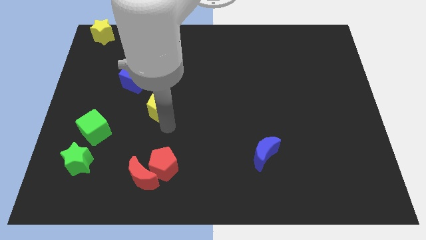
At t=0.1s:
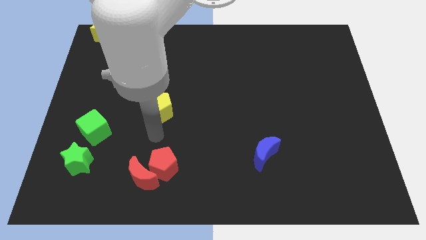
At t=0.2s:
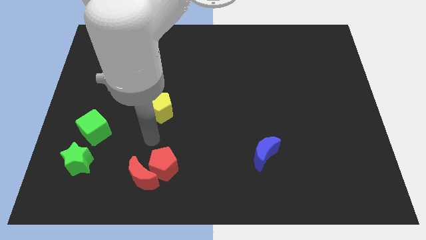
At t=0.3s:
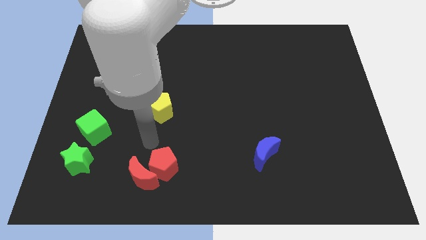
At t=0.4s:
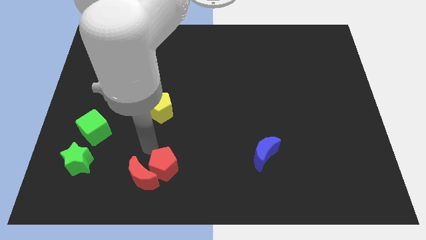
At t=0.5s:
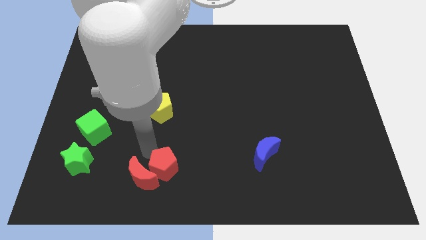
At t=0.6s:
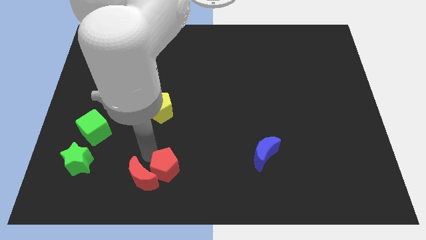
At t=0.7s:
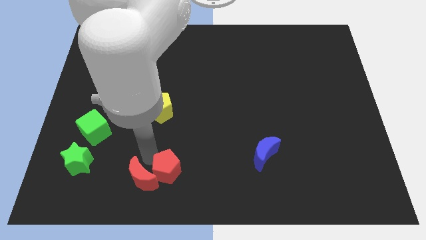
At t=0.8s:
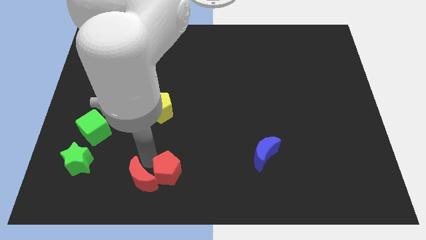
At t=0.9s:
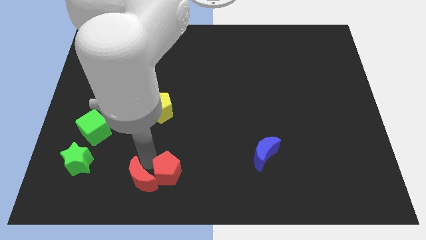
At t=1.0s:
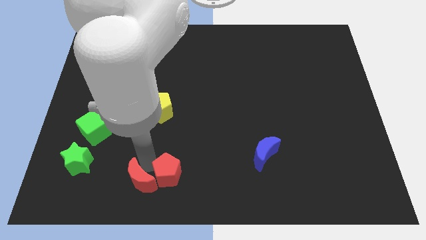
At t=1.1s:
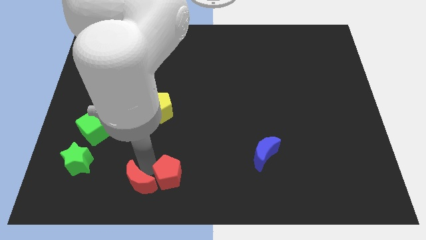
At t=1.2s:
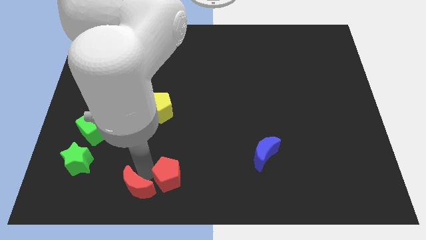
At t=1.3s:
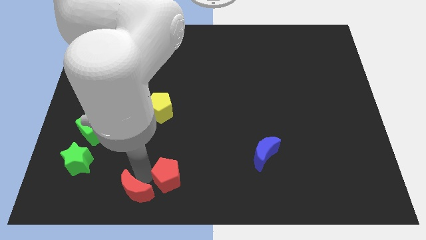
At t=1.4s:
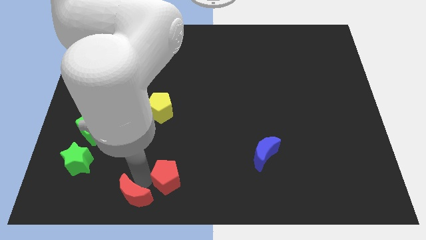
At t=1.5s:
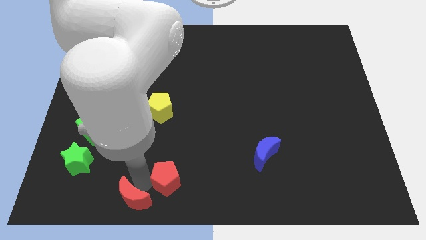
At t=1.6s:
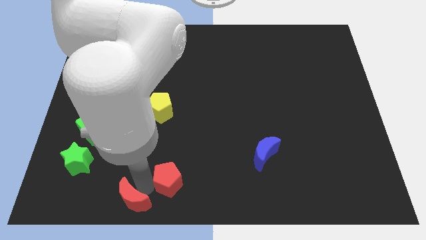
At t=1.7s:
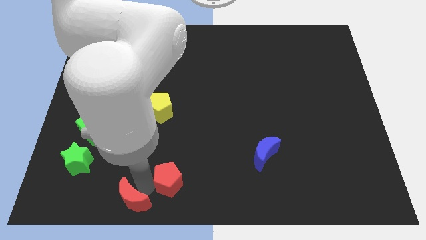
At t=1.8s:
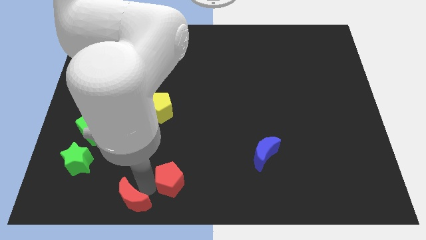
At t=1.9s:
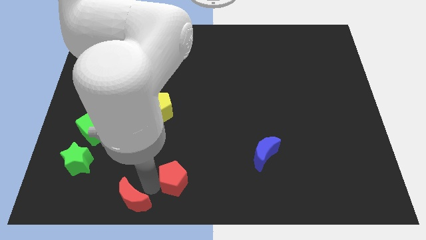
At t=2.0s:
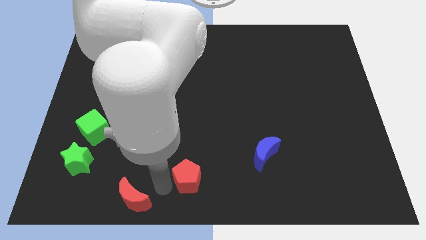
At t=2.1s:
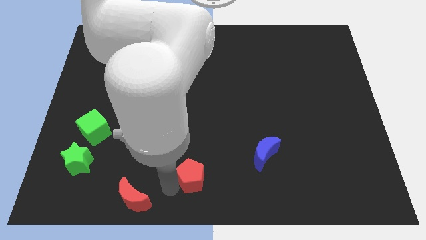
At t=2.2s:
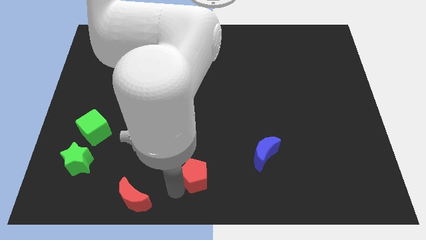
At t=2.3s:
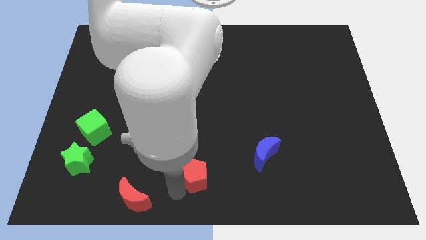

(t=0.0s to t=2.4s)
separate the red moon and the red pentagon

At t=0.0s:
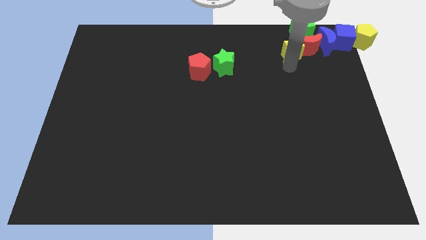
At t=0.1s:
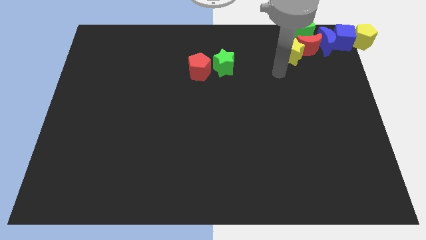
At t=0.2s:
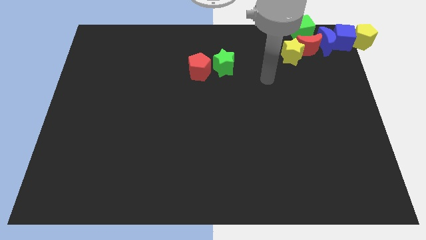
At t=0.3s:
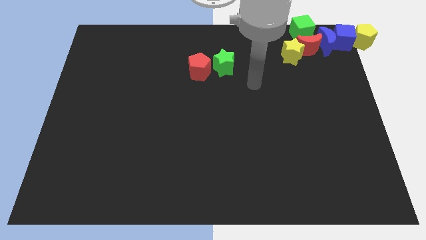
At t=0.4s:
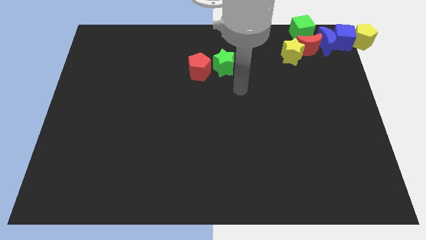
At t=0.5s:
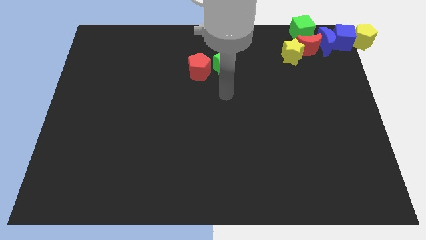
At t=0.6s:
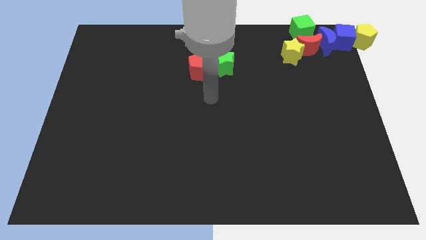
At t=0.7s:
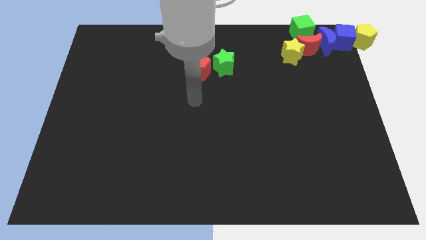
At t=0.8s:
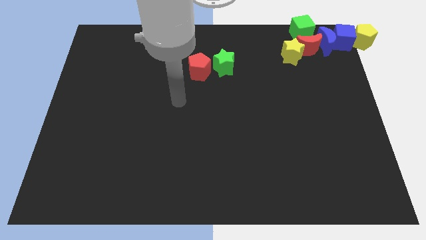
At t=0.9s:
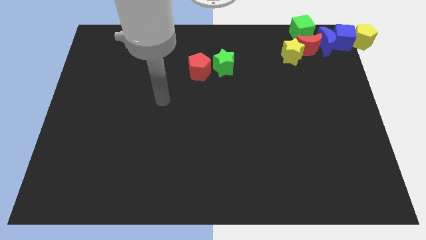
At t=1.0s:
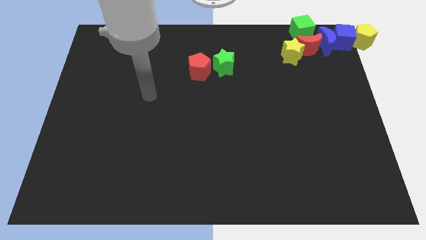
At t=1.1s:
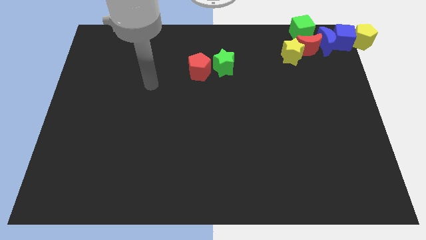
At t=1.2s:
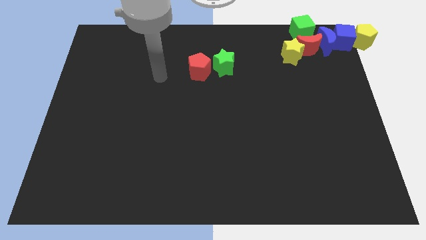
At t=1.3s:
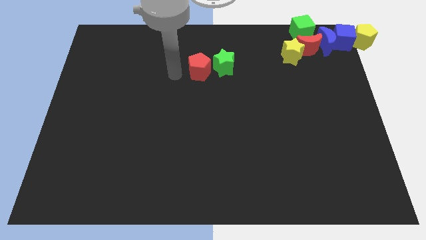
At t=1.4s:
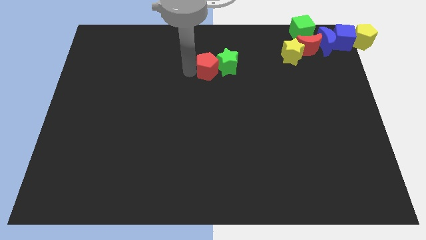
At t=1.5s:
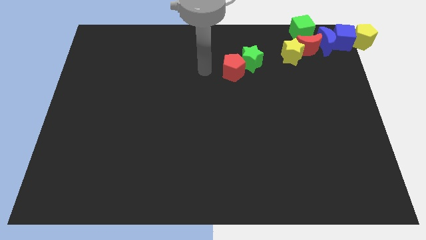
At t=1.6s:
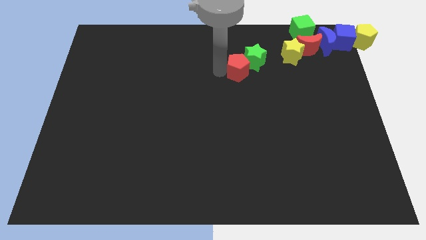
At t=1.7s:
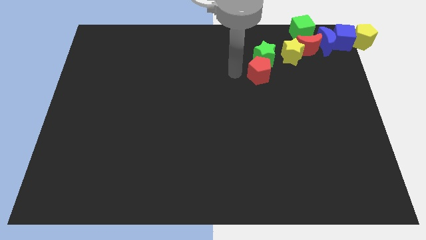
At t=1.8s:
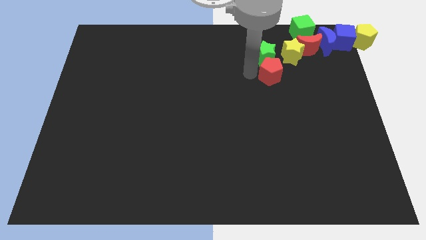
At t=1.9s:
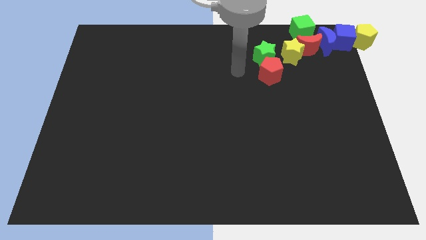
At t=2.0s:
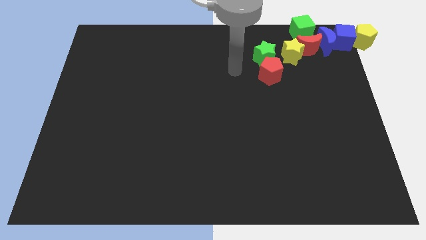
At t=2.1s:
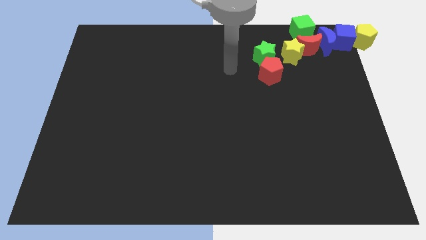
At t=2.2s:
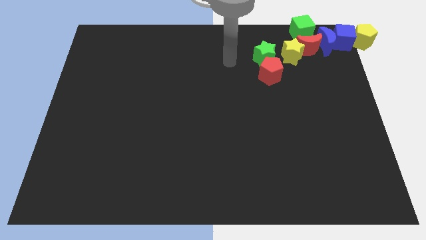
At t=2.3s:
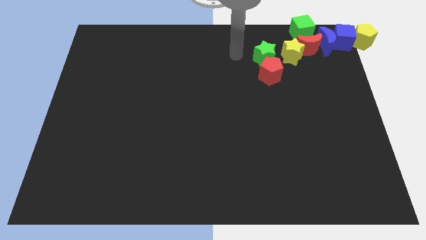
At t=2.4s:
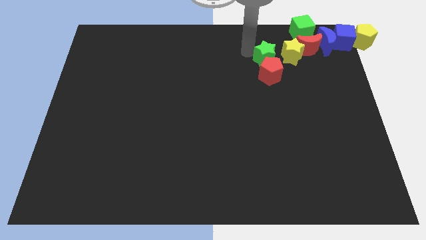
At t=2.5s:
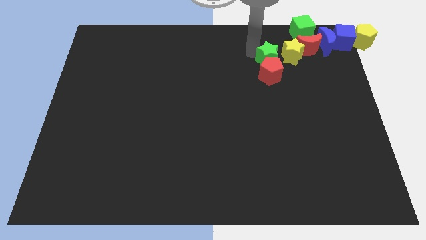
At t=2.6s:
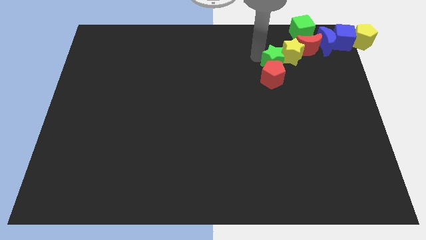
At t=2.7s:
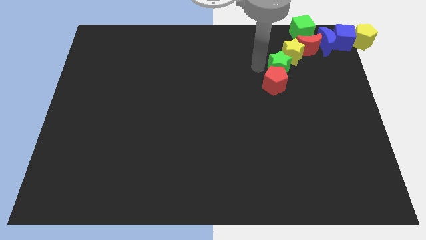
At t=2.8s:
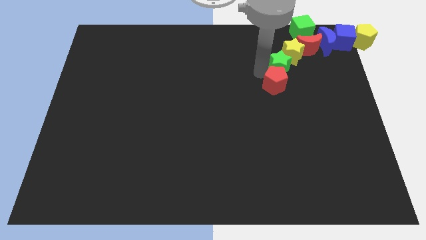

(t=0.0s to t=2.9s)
move the green star into the red pentagon

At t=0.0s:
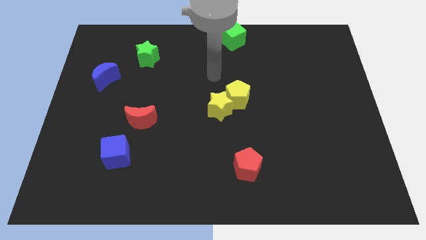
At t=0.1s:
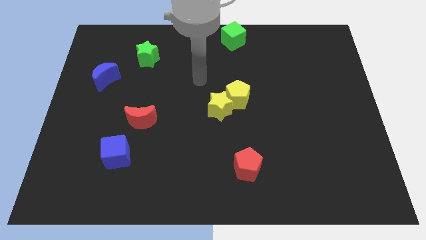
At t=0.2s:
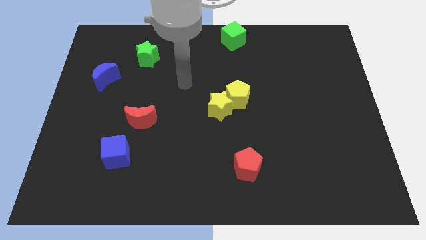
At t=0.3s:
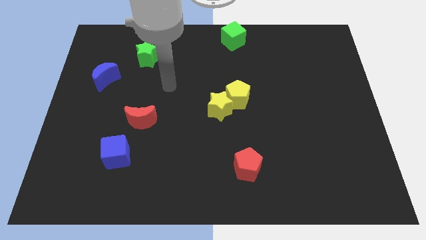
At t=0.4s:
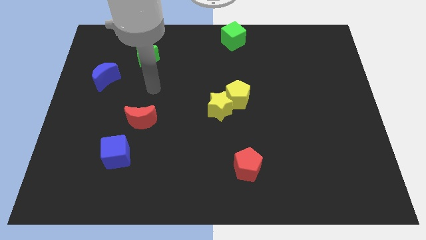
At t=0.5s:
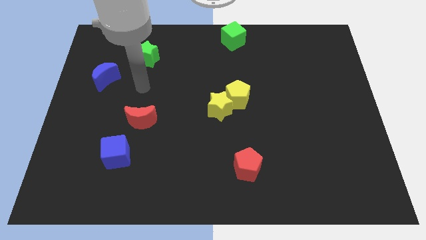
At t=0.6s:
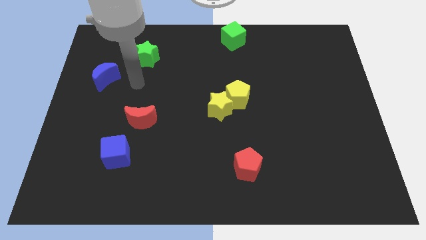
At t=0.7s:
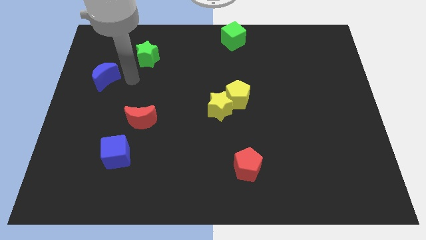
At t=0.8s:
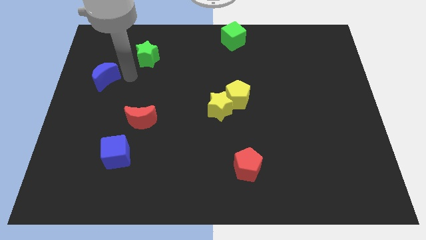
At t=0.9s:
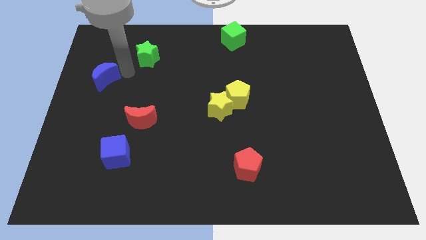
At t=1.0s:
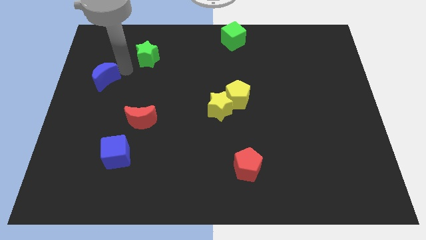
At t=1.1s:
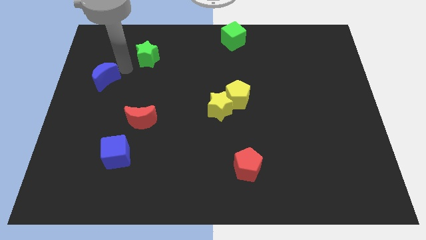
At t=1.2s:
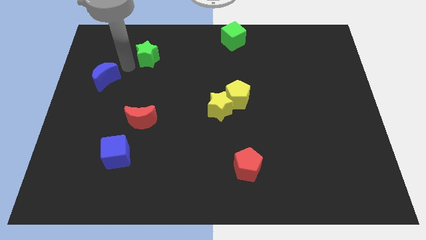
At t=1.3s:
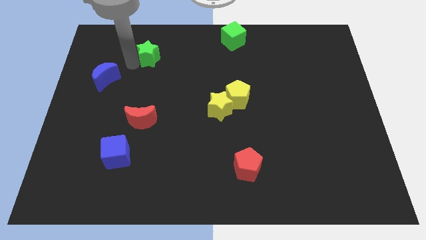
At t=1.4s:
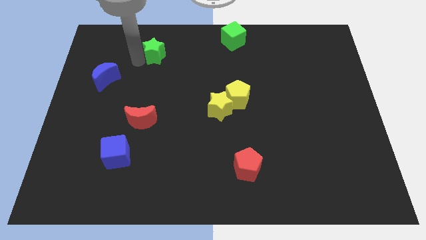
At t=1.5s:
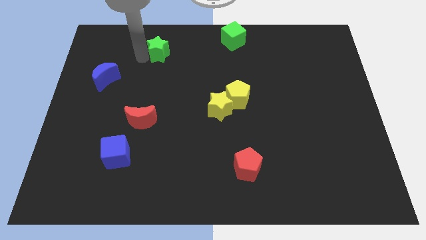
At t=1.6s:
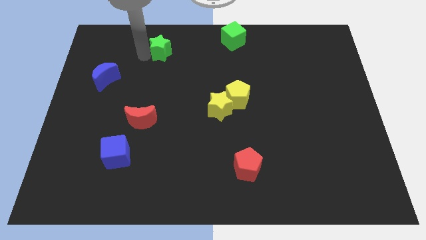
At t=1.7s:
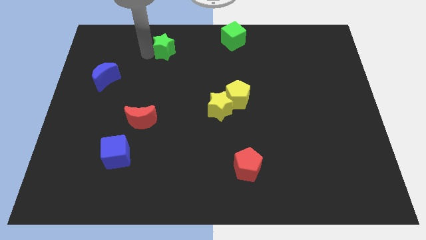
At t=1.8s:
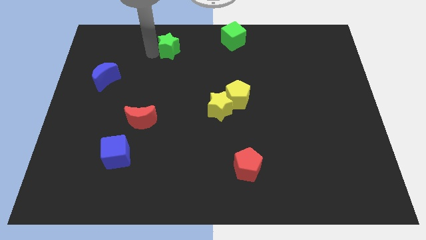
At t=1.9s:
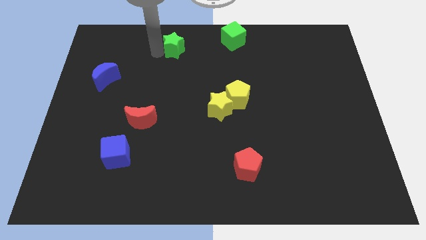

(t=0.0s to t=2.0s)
move the green star towards the green cube

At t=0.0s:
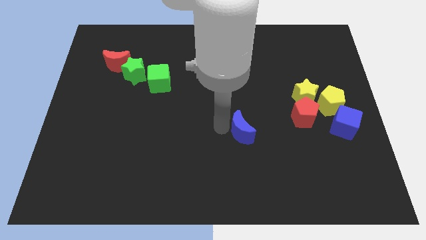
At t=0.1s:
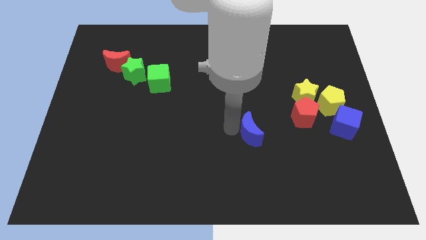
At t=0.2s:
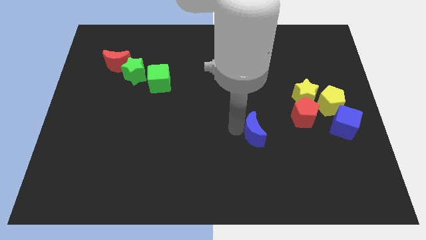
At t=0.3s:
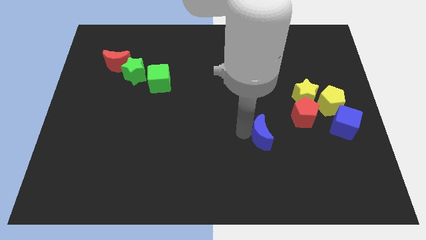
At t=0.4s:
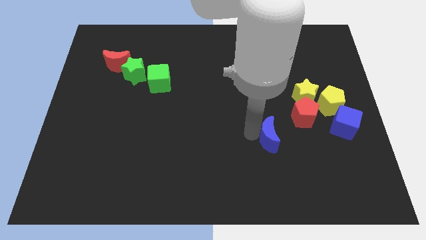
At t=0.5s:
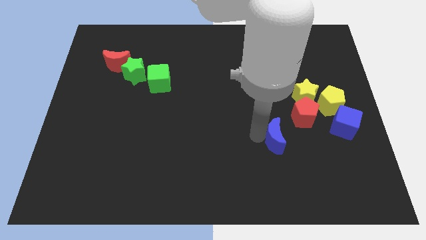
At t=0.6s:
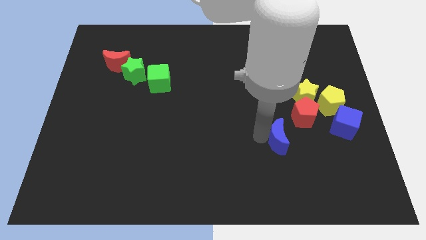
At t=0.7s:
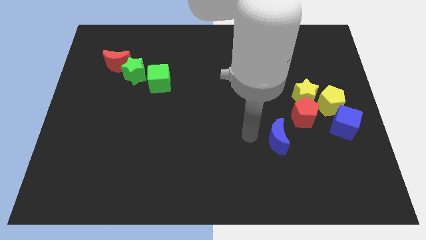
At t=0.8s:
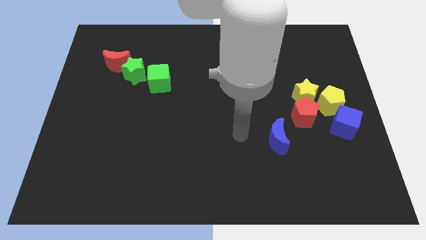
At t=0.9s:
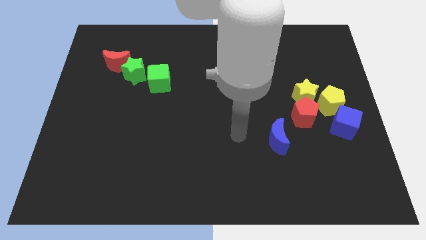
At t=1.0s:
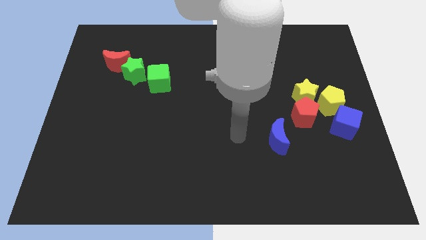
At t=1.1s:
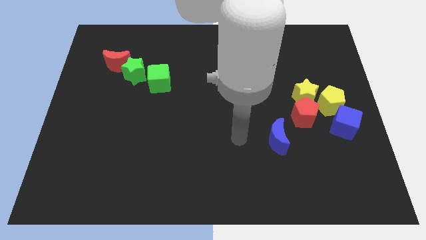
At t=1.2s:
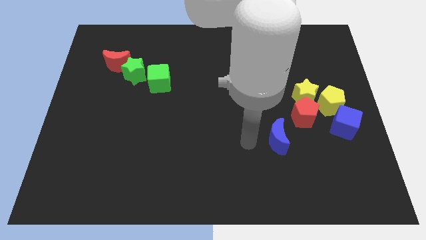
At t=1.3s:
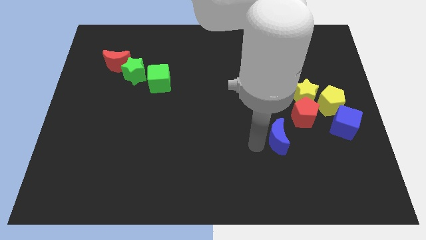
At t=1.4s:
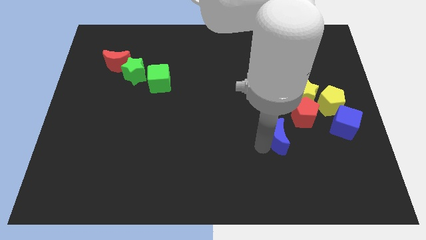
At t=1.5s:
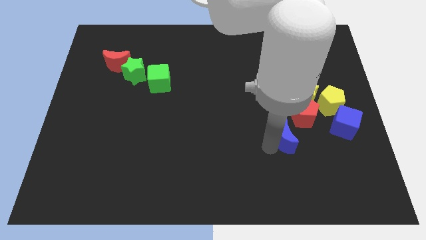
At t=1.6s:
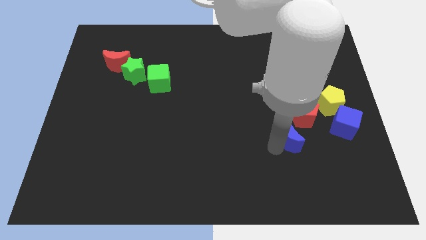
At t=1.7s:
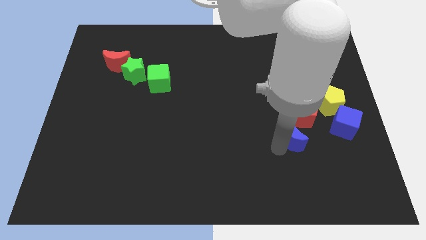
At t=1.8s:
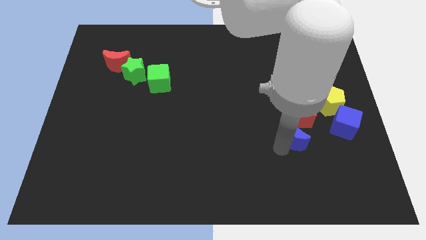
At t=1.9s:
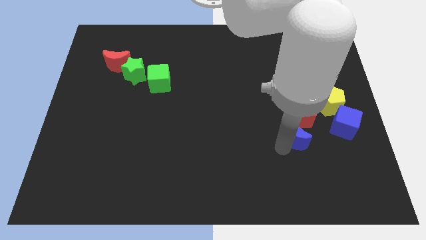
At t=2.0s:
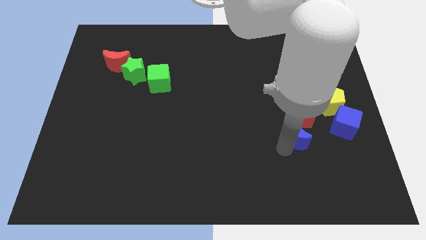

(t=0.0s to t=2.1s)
place the blue moon below the red pentagon
